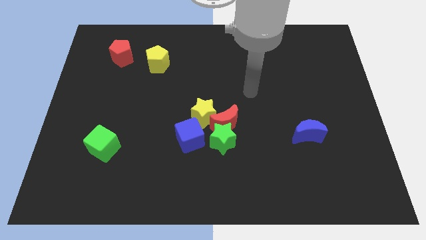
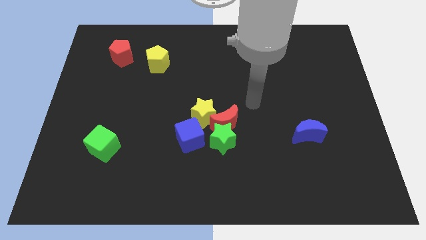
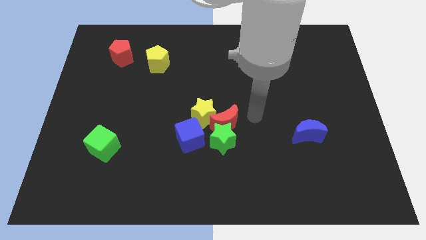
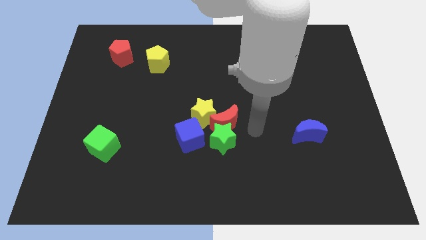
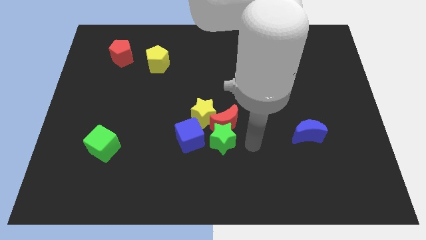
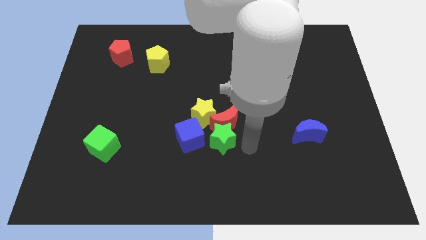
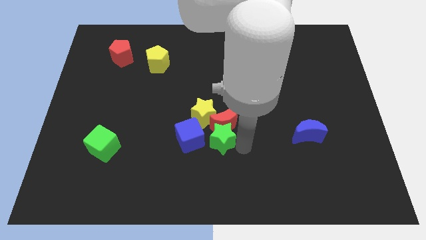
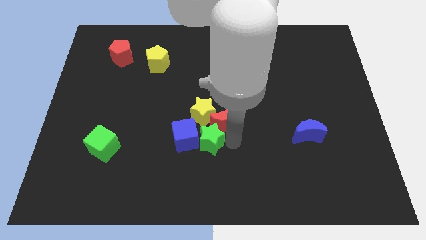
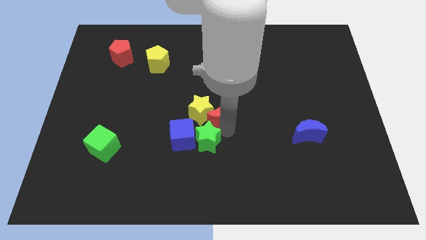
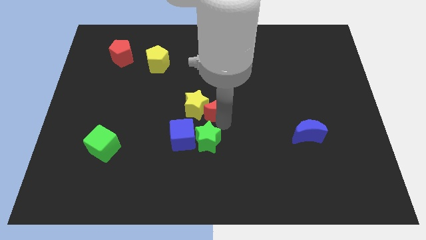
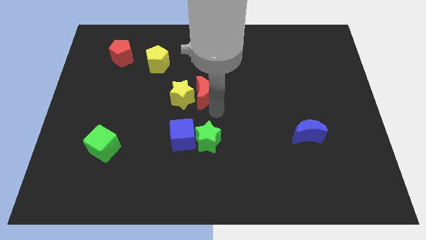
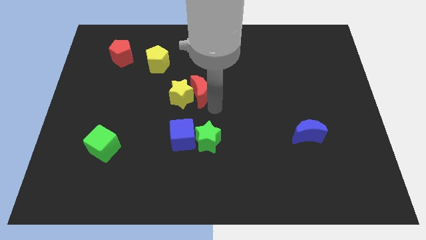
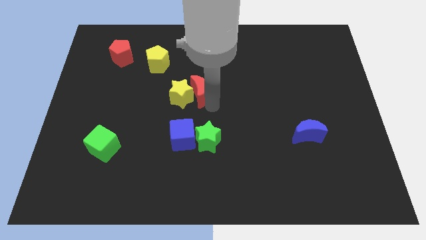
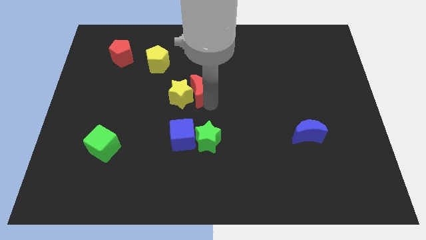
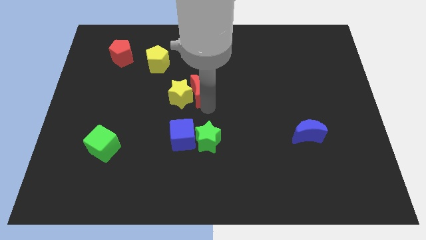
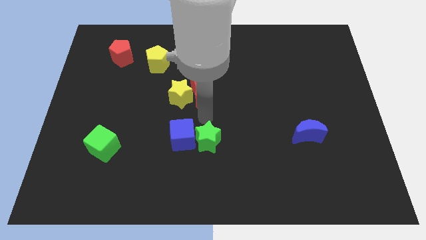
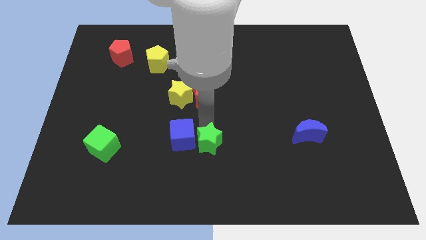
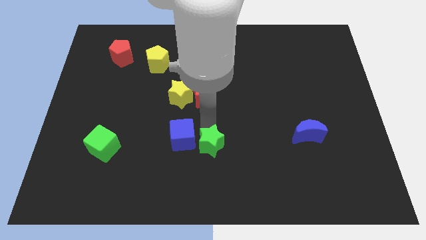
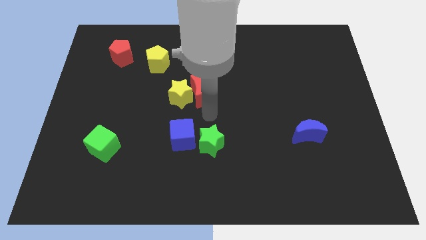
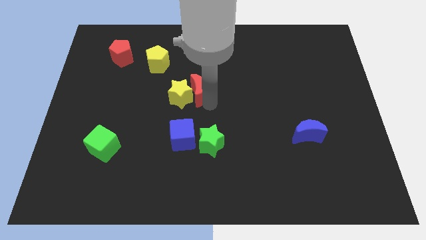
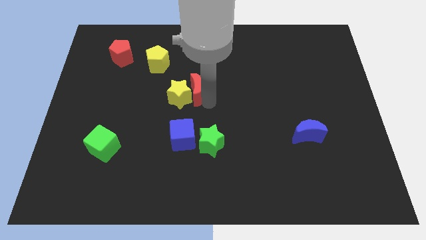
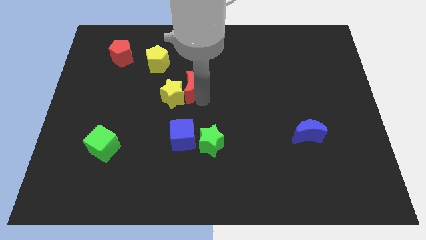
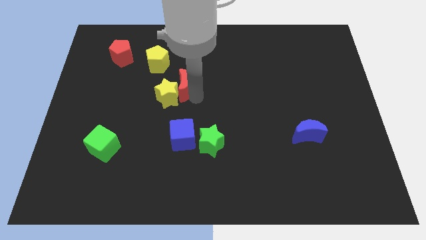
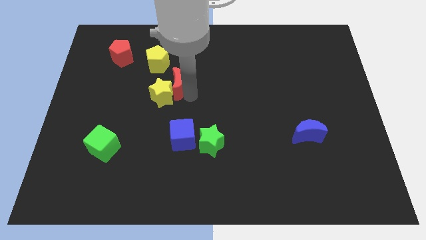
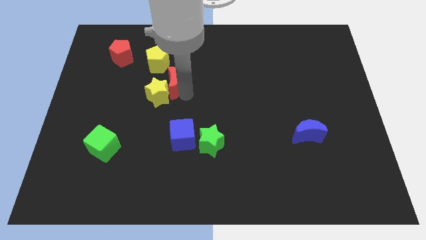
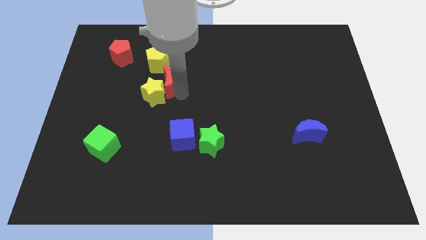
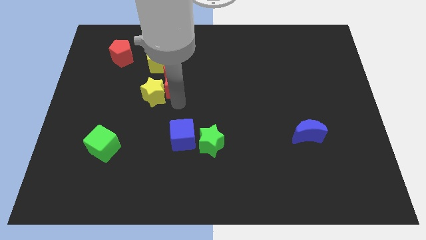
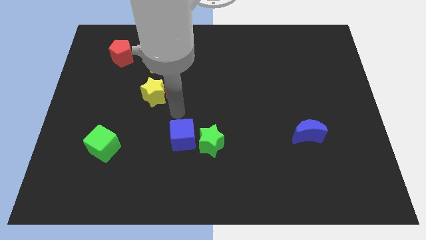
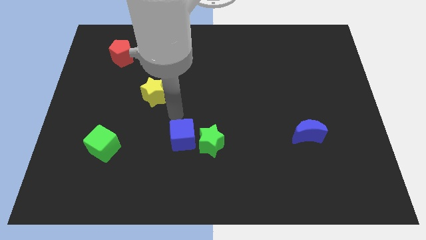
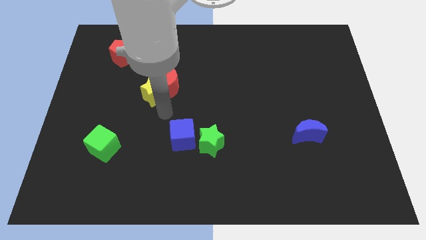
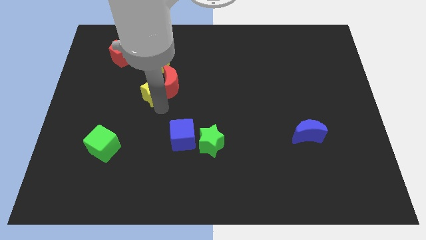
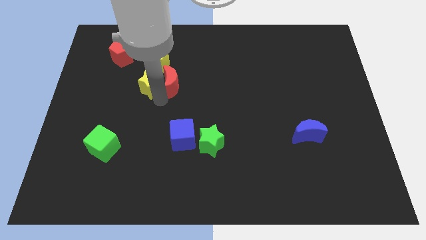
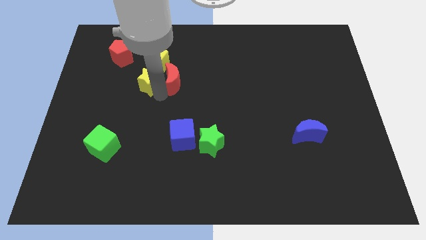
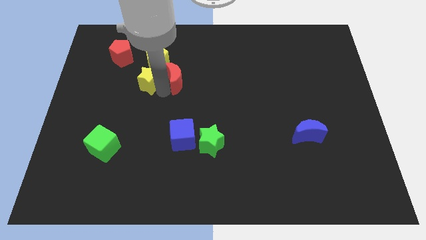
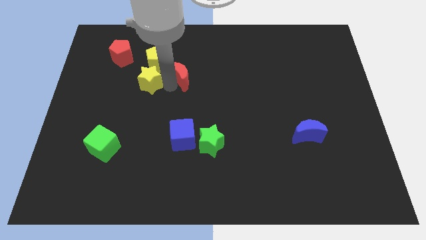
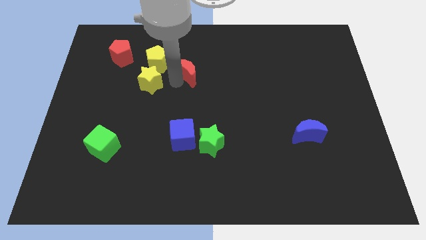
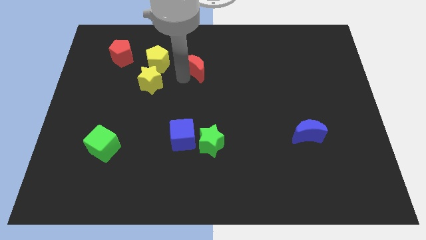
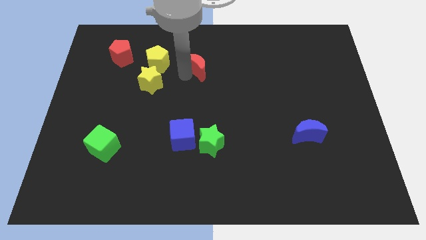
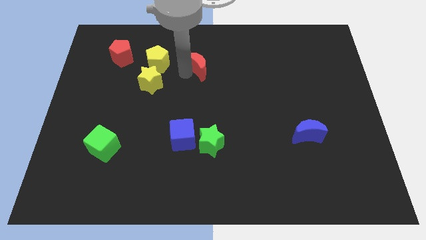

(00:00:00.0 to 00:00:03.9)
separate the yellow star and red moon

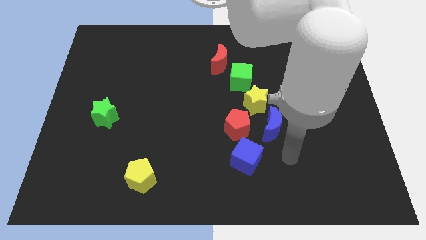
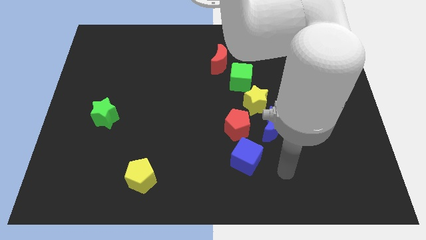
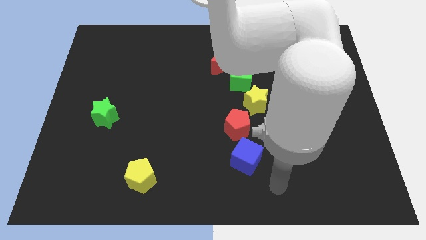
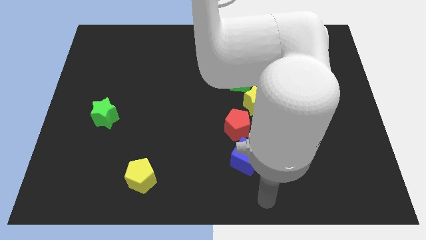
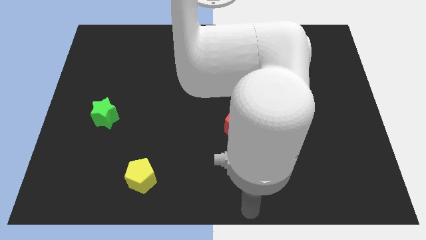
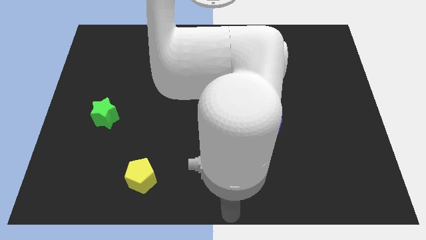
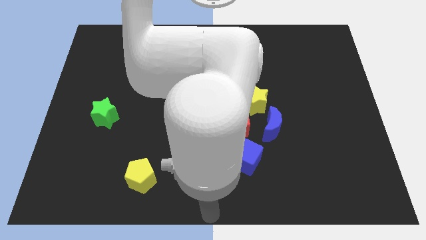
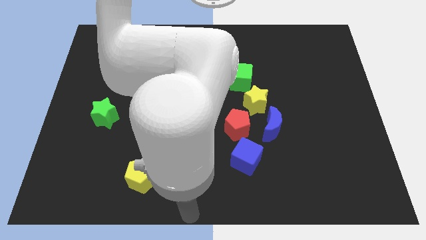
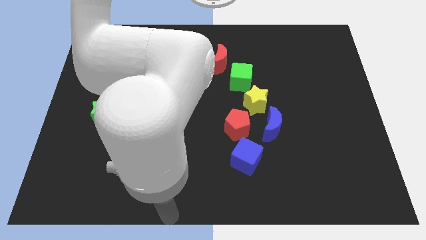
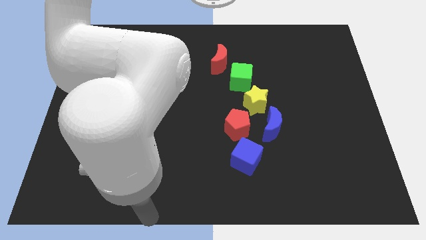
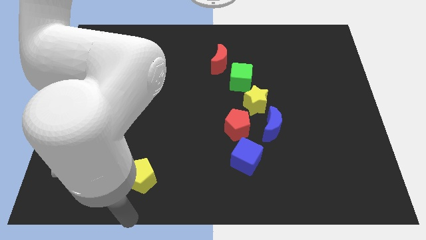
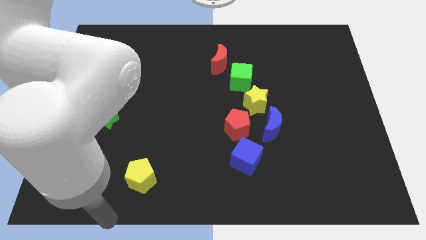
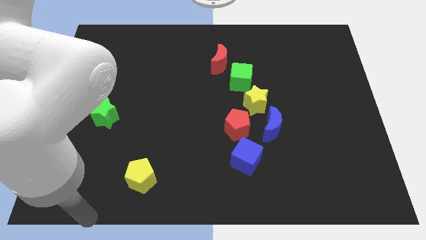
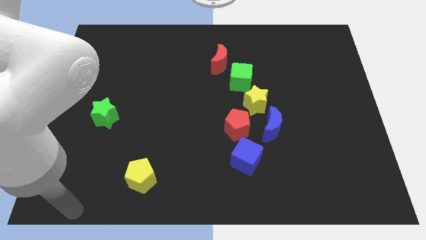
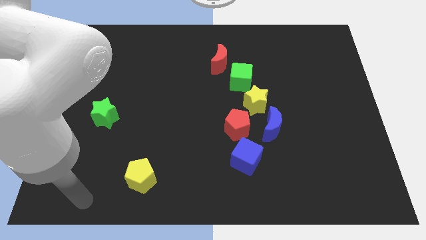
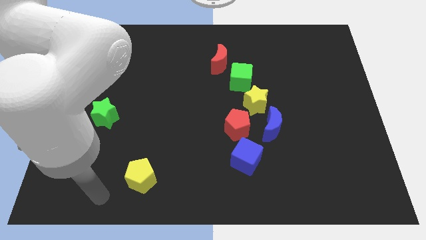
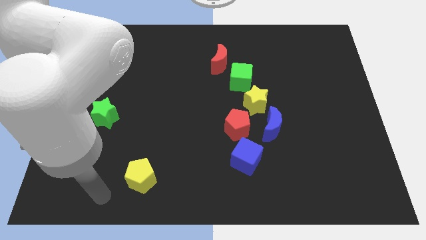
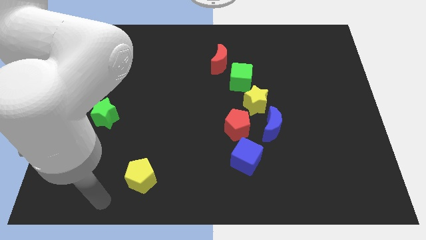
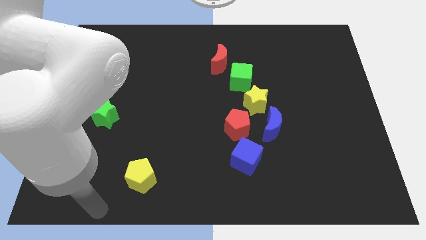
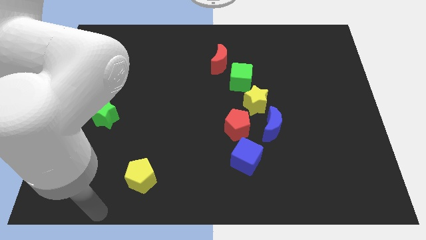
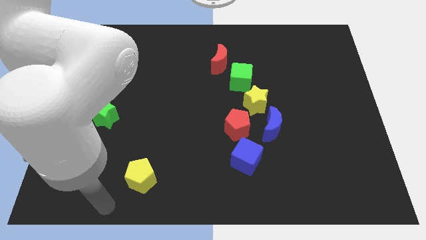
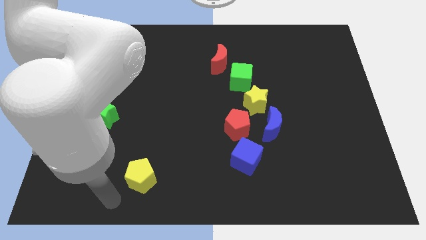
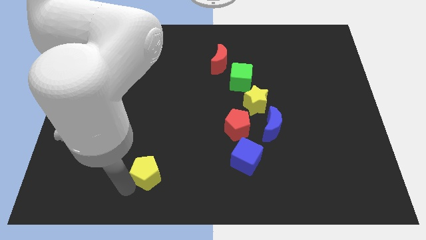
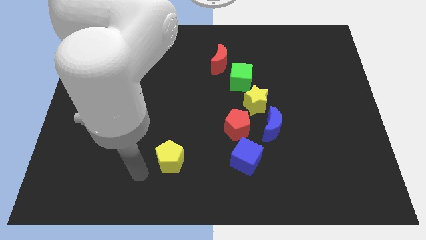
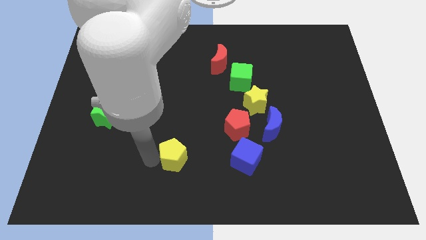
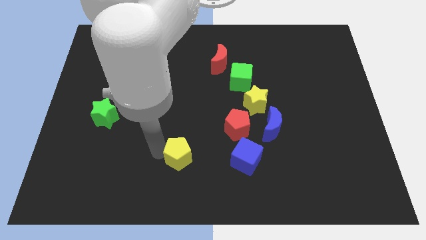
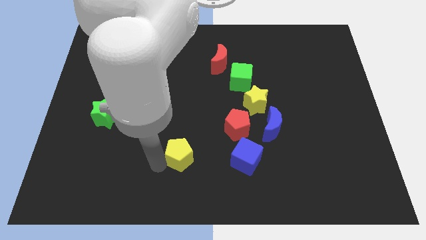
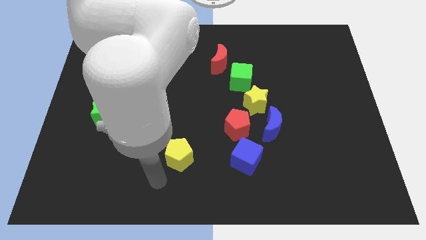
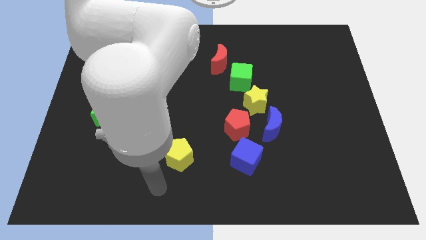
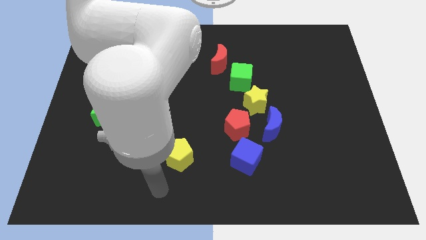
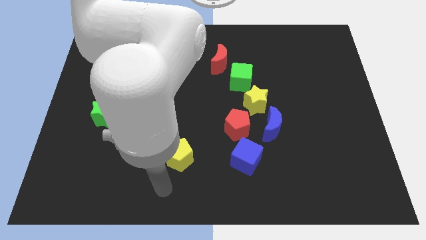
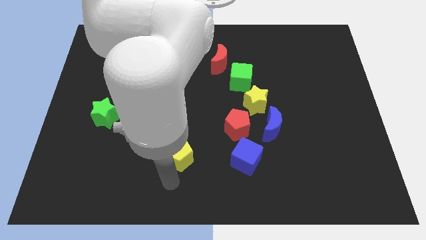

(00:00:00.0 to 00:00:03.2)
move the yellow pentagon towards left of blue cube

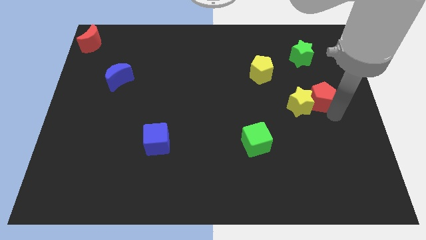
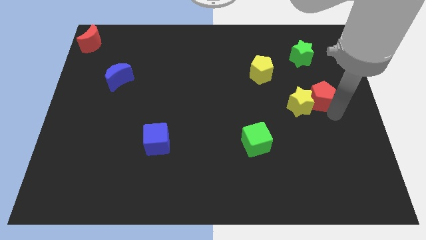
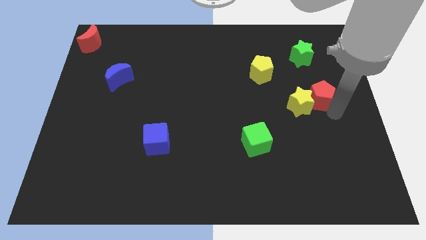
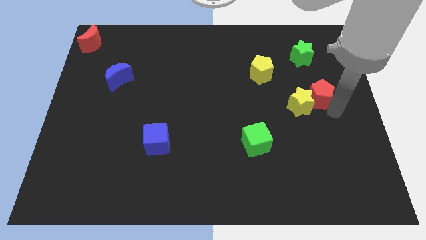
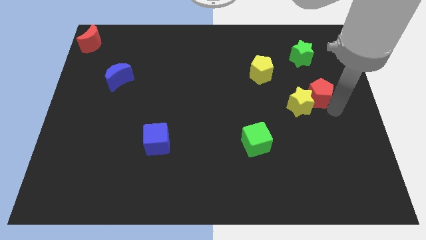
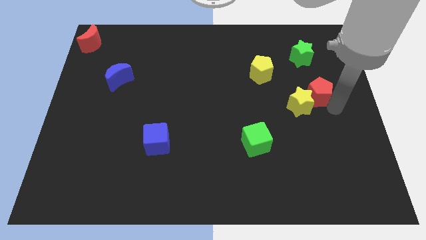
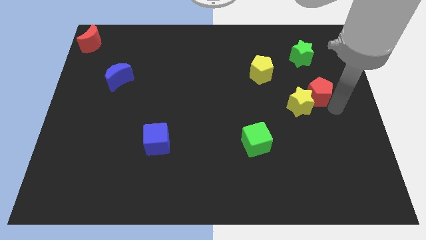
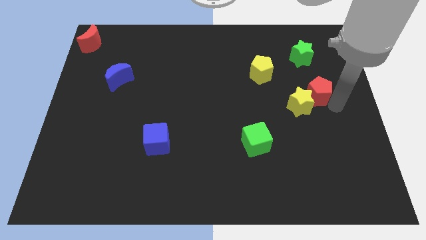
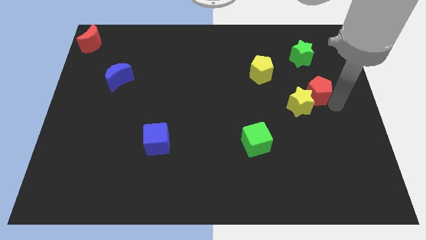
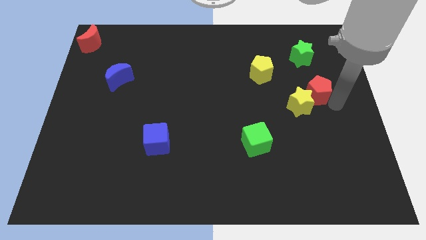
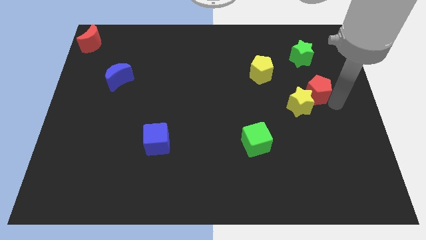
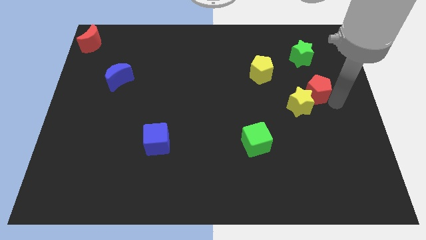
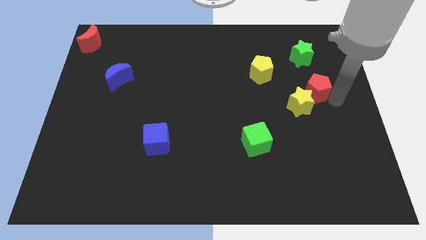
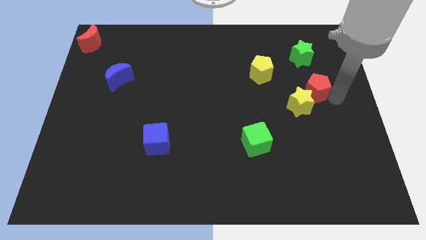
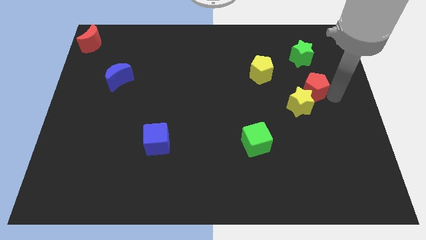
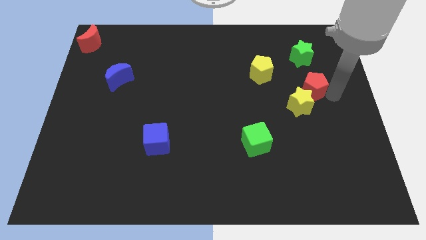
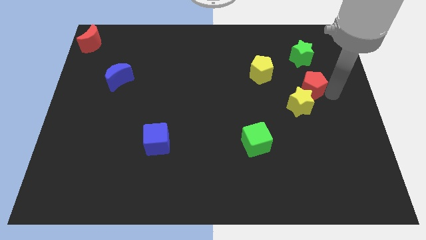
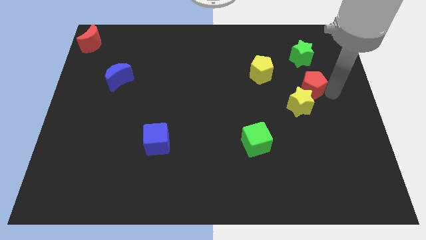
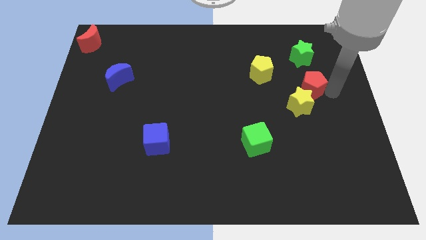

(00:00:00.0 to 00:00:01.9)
push the red pentagon slightly on its back side
